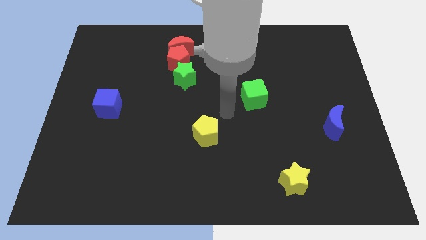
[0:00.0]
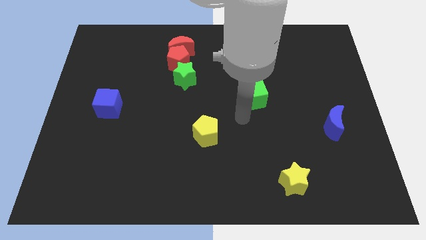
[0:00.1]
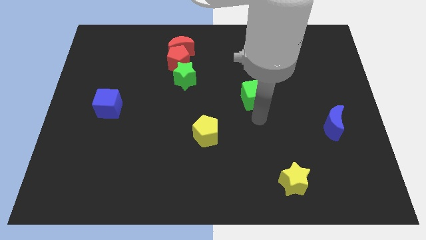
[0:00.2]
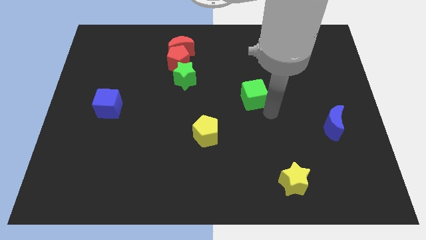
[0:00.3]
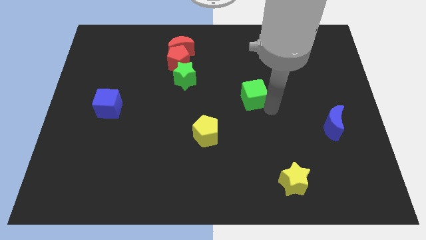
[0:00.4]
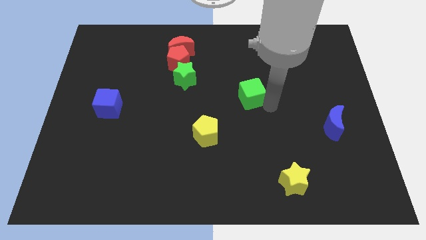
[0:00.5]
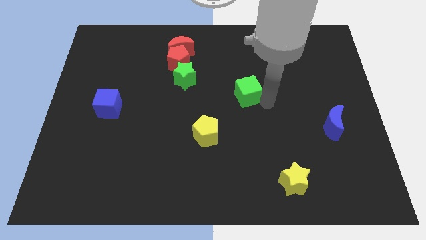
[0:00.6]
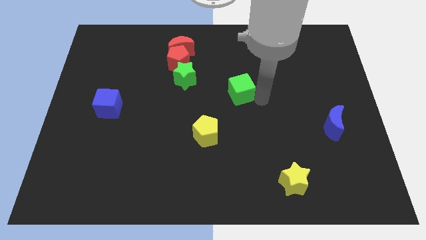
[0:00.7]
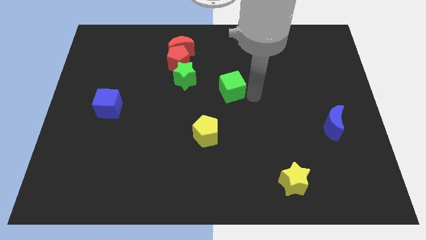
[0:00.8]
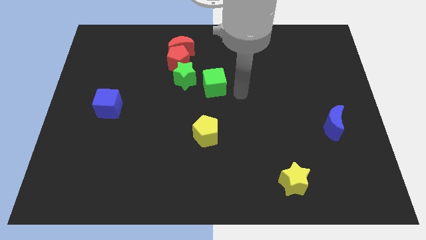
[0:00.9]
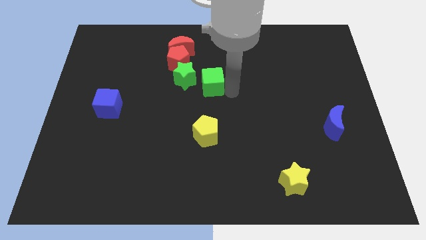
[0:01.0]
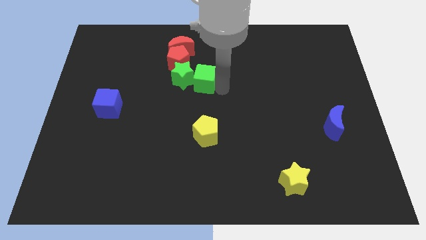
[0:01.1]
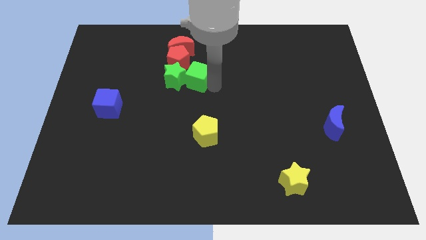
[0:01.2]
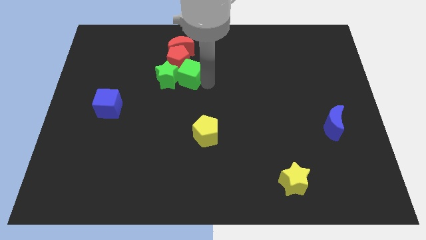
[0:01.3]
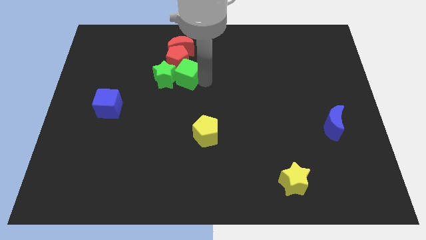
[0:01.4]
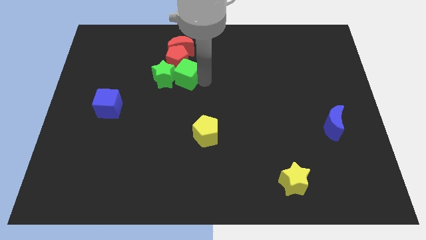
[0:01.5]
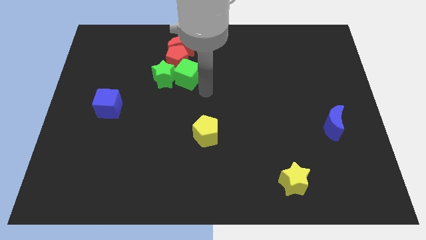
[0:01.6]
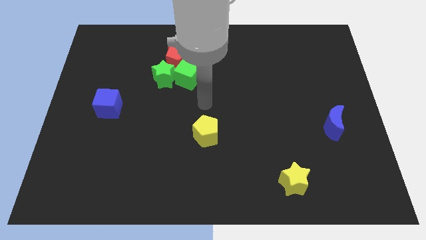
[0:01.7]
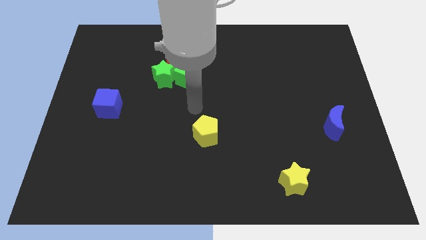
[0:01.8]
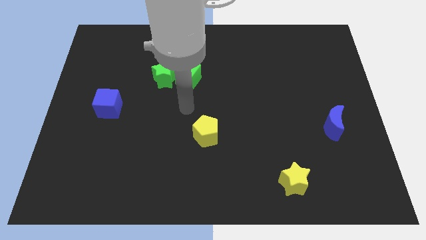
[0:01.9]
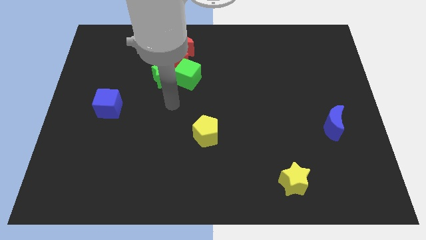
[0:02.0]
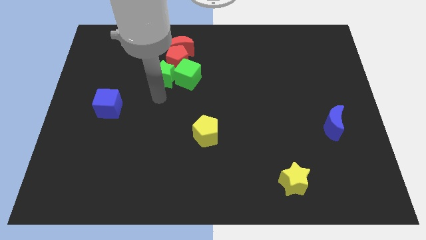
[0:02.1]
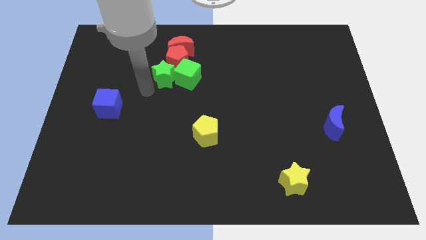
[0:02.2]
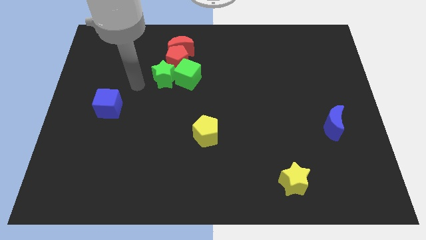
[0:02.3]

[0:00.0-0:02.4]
push the green cube into green star

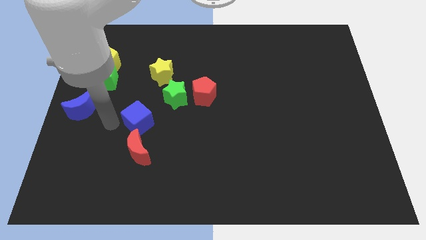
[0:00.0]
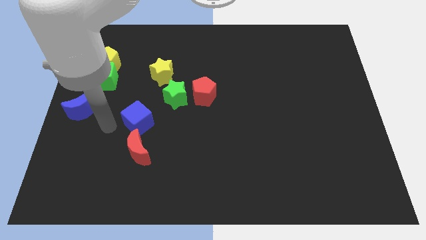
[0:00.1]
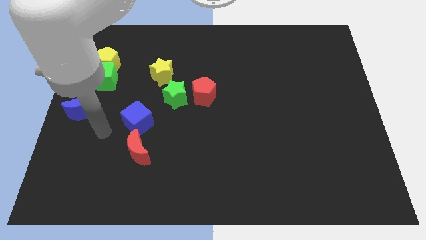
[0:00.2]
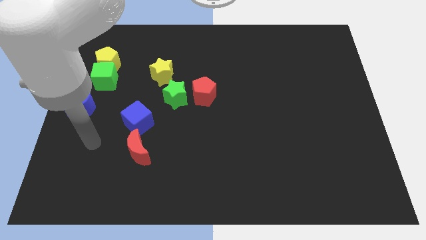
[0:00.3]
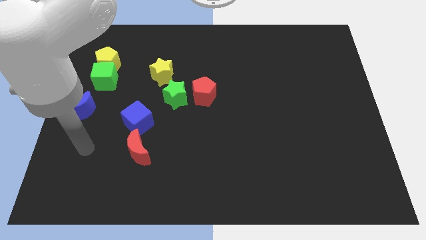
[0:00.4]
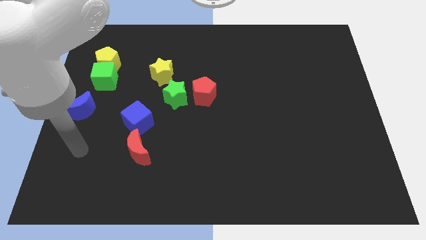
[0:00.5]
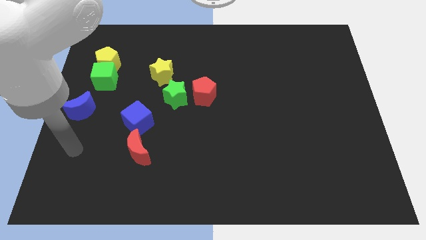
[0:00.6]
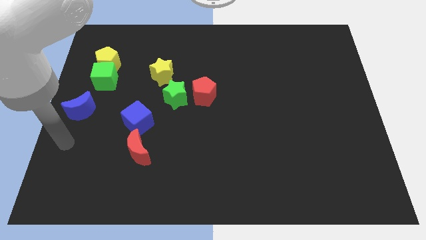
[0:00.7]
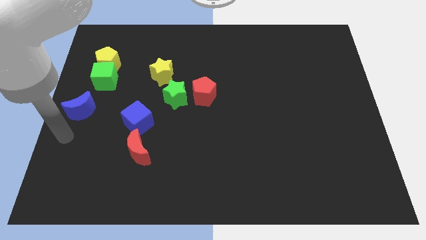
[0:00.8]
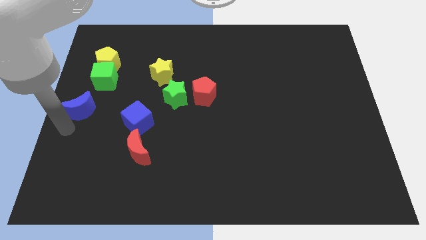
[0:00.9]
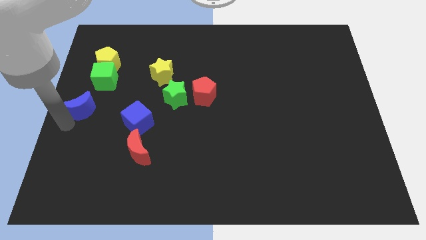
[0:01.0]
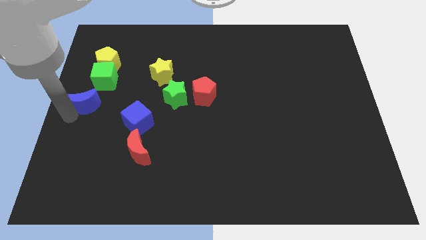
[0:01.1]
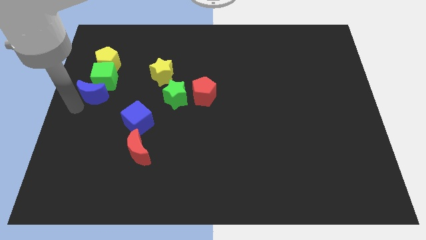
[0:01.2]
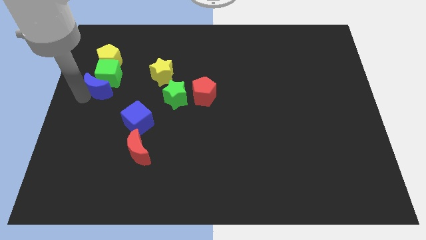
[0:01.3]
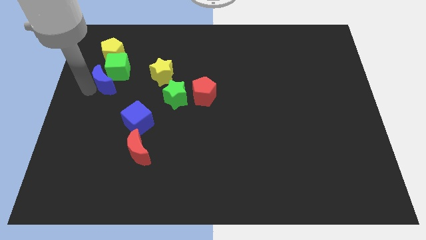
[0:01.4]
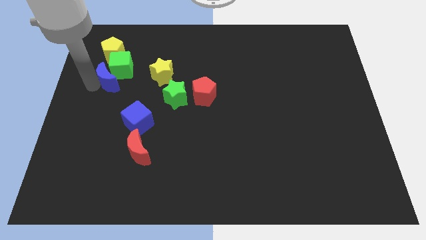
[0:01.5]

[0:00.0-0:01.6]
push the blue moon into the green cube

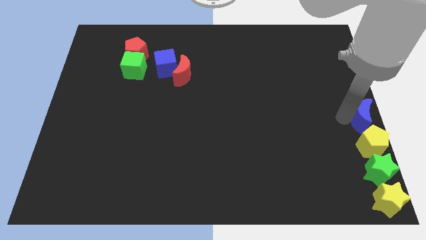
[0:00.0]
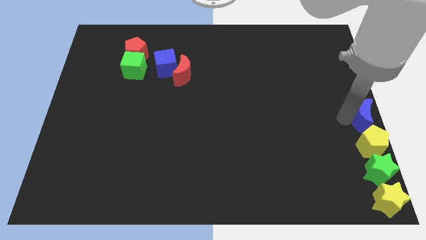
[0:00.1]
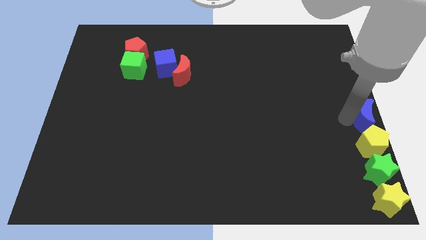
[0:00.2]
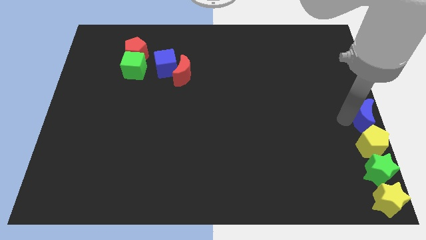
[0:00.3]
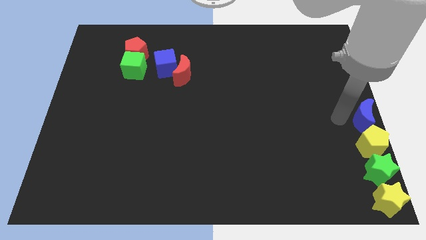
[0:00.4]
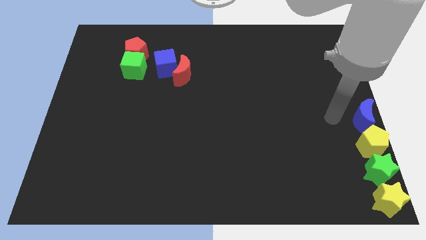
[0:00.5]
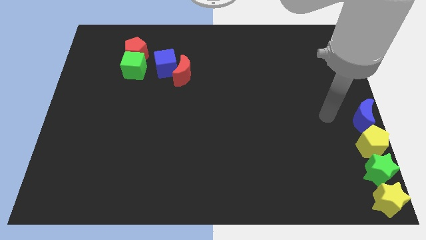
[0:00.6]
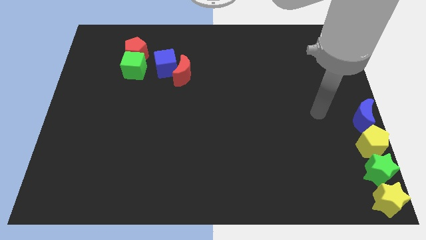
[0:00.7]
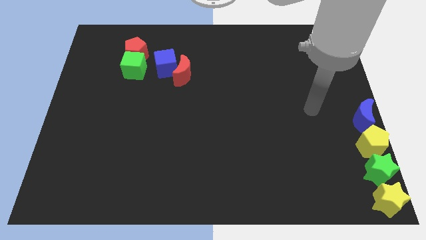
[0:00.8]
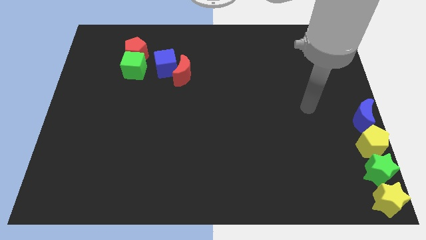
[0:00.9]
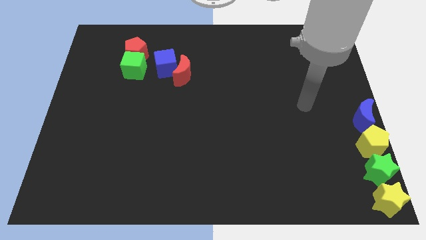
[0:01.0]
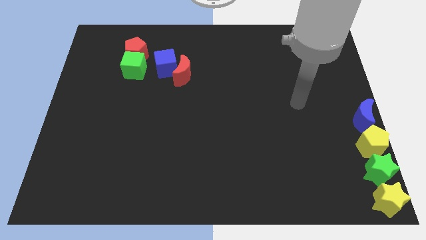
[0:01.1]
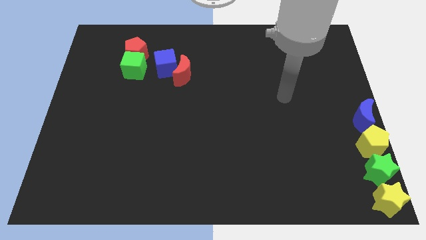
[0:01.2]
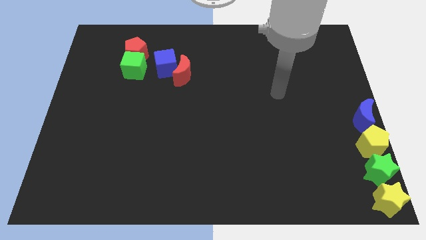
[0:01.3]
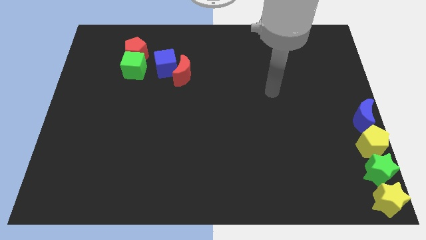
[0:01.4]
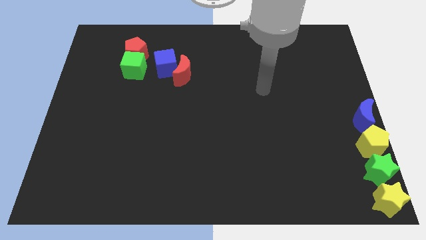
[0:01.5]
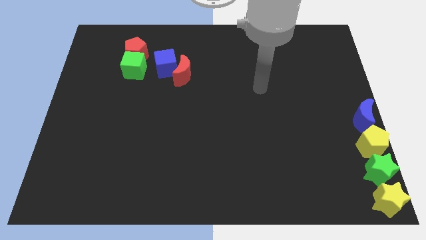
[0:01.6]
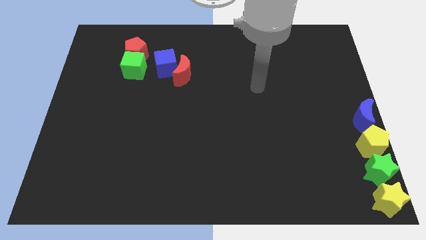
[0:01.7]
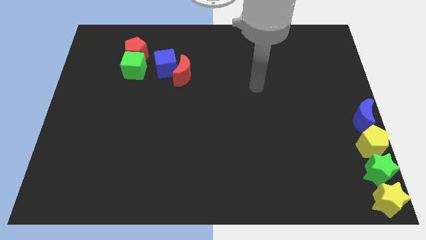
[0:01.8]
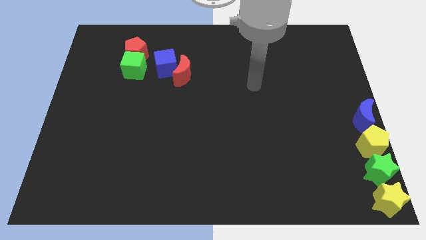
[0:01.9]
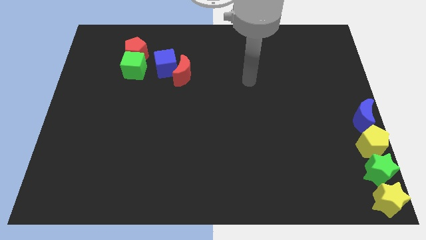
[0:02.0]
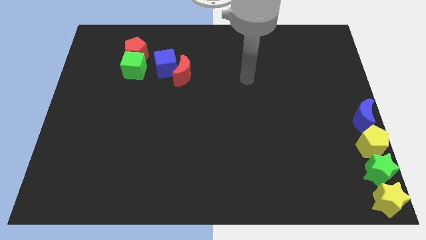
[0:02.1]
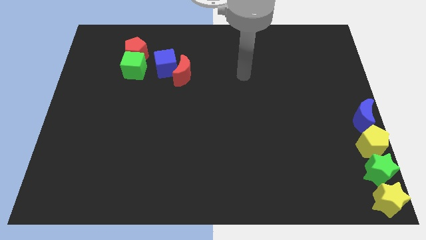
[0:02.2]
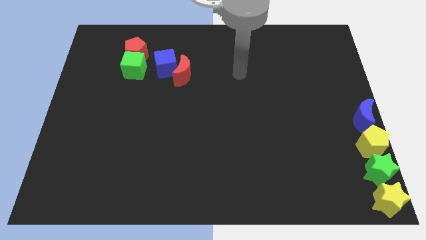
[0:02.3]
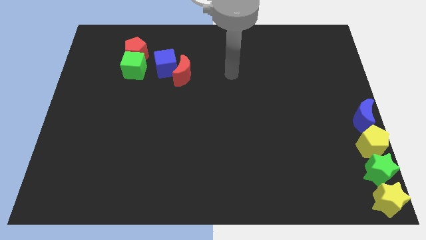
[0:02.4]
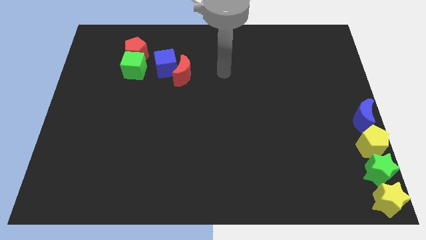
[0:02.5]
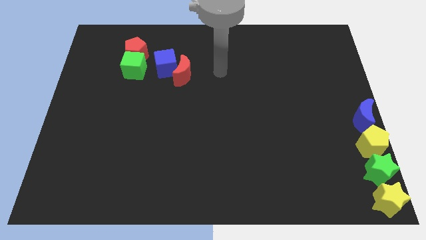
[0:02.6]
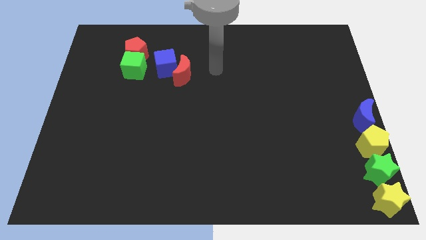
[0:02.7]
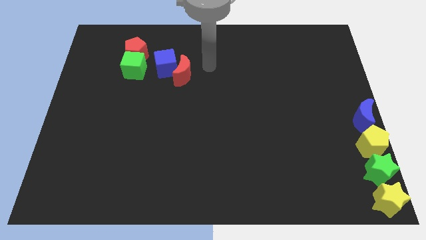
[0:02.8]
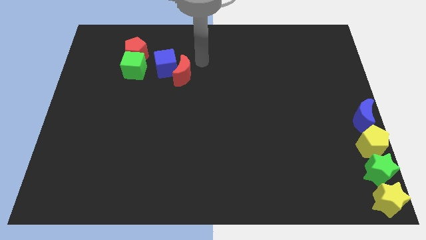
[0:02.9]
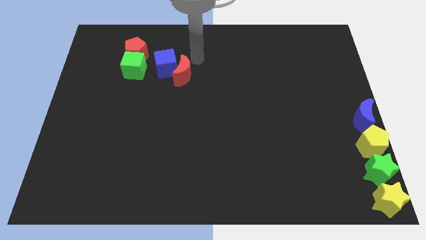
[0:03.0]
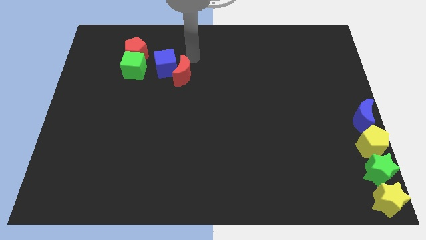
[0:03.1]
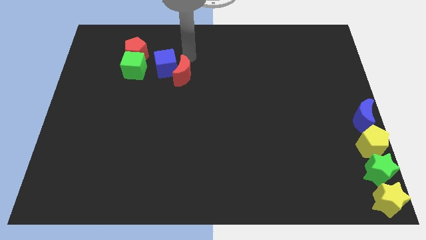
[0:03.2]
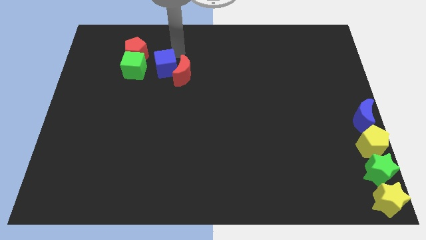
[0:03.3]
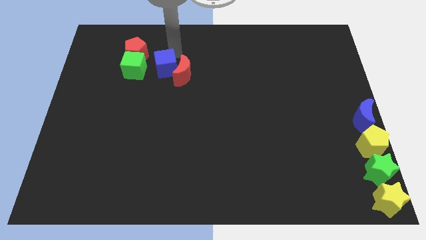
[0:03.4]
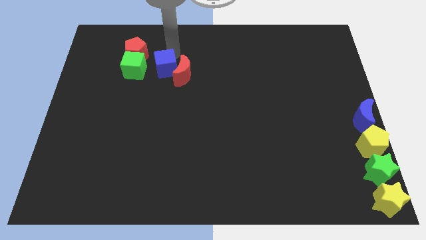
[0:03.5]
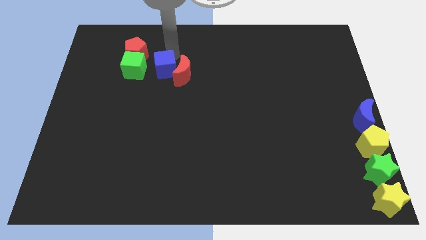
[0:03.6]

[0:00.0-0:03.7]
move arm near blue cube

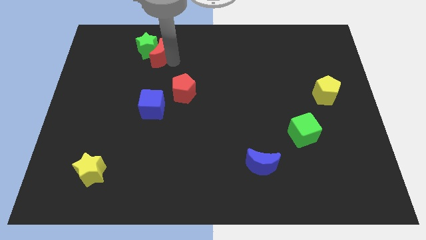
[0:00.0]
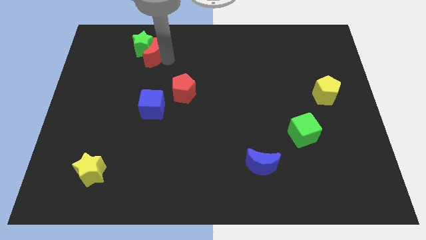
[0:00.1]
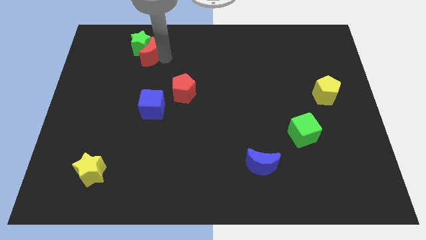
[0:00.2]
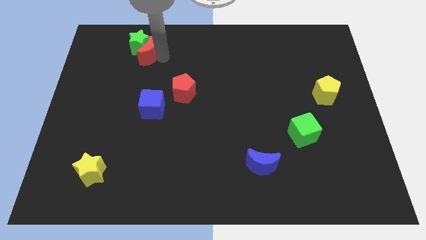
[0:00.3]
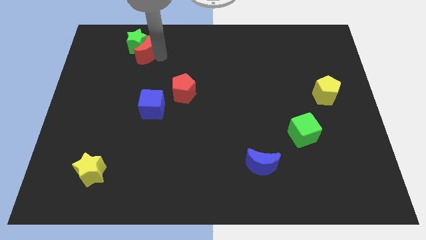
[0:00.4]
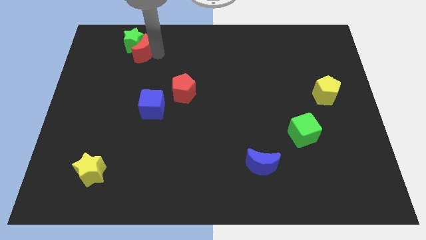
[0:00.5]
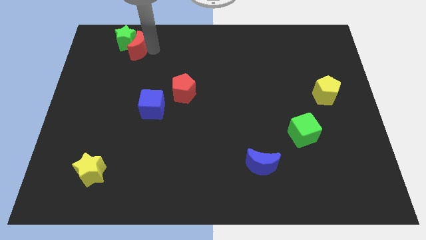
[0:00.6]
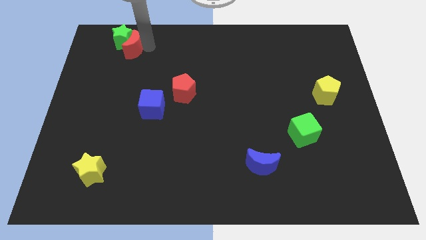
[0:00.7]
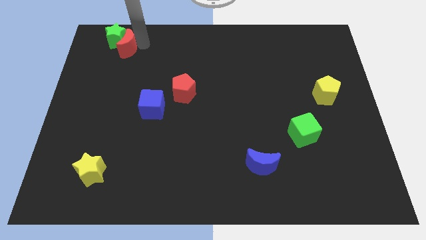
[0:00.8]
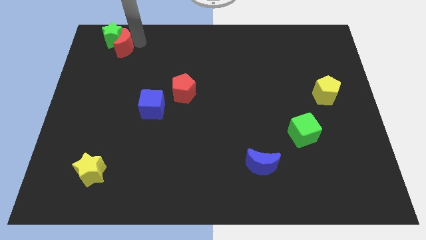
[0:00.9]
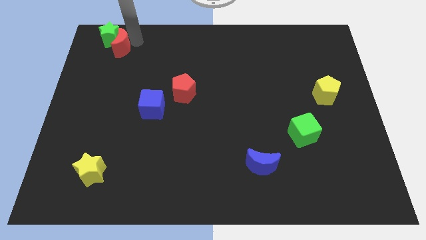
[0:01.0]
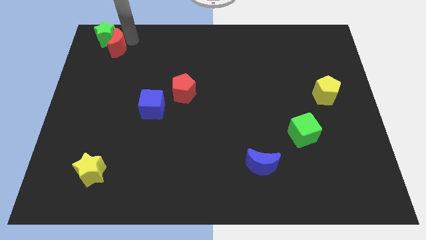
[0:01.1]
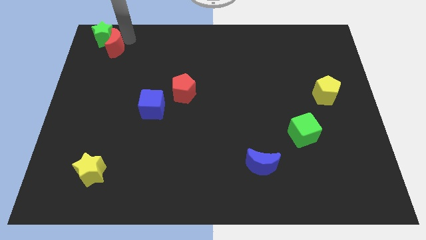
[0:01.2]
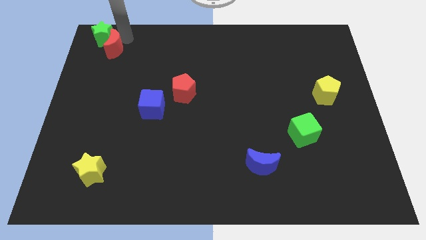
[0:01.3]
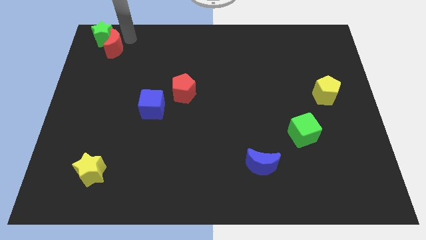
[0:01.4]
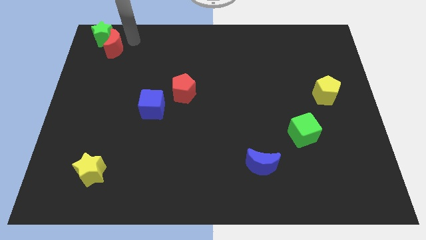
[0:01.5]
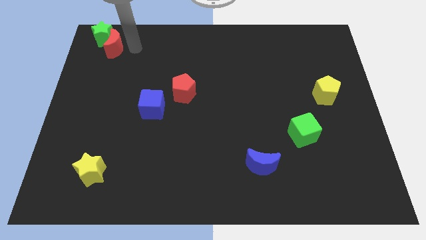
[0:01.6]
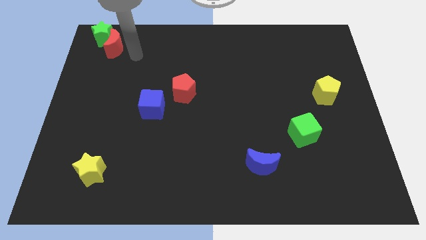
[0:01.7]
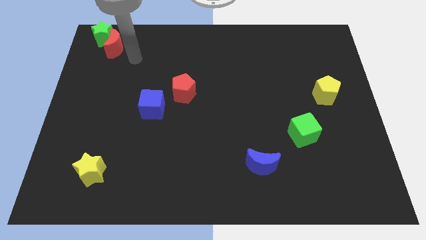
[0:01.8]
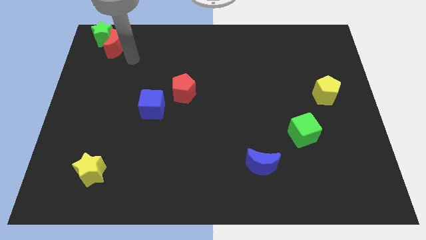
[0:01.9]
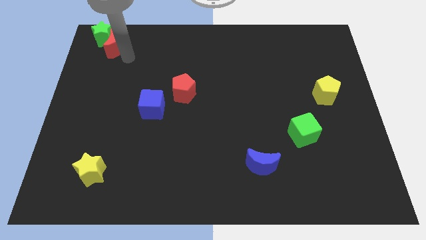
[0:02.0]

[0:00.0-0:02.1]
move red moon with star towards top left side of the board
